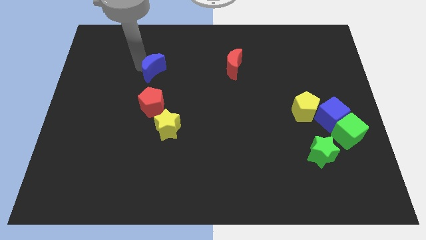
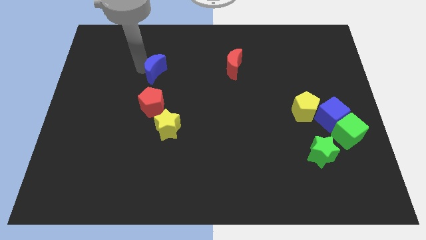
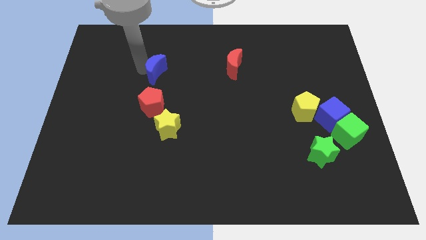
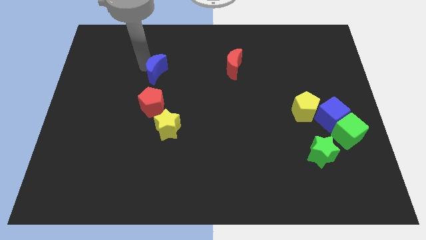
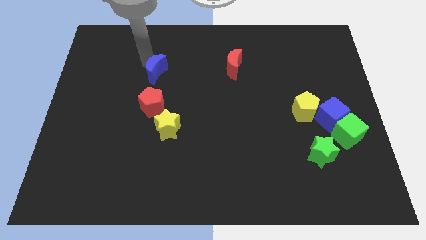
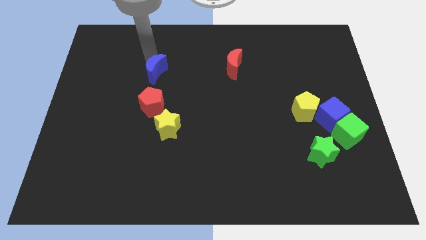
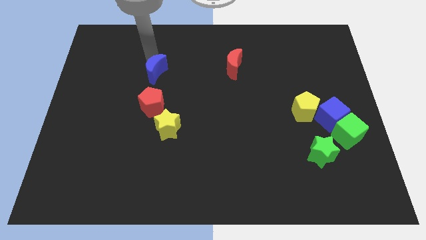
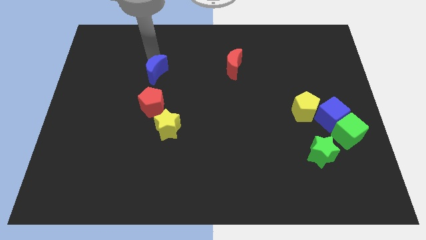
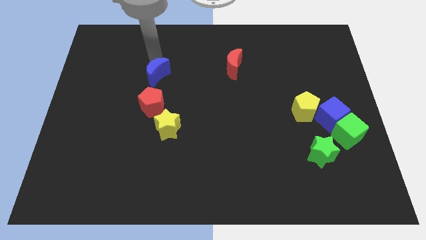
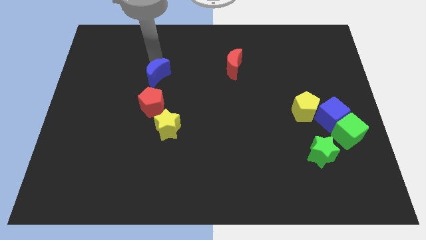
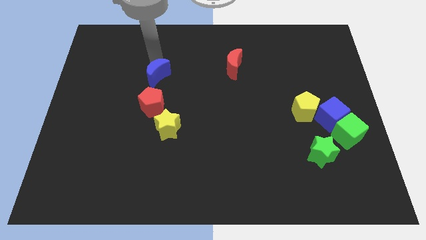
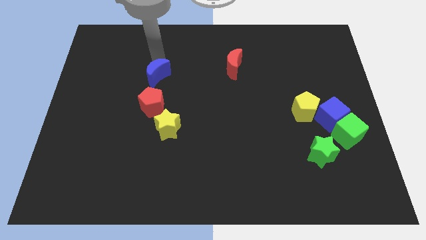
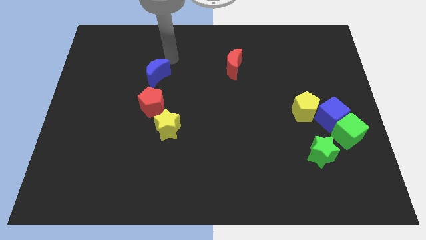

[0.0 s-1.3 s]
move the blue crescent close to the red pentagon

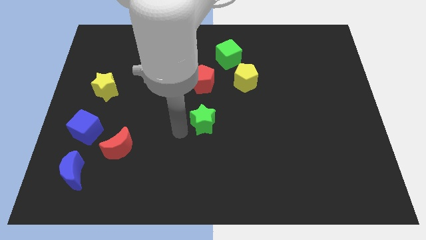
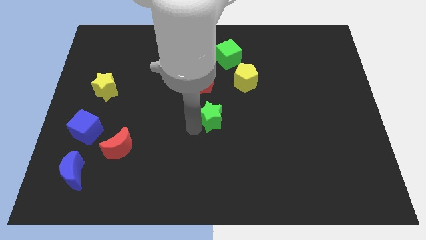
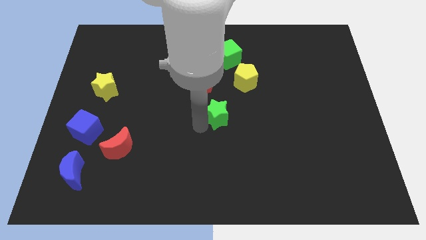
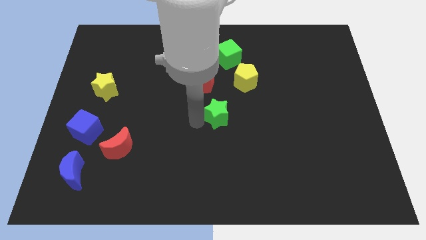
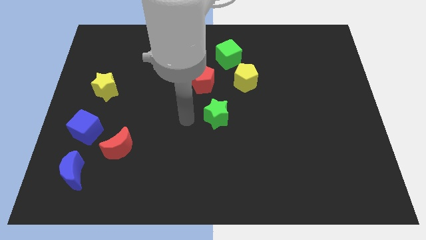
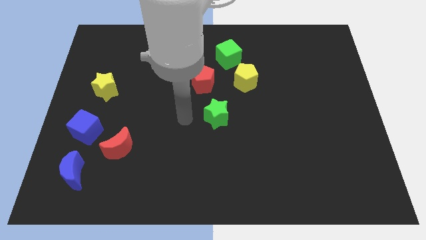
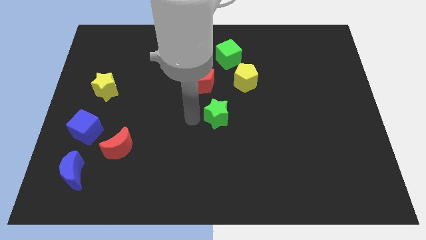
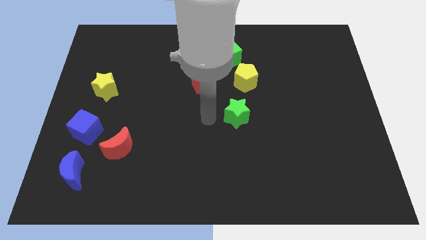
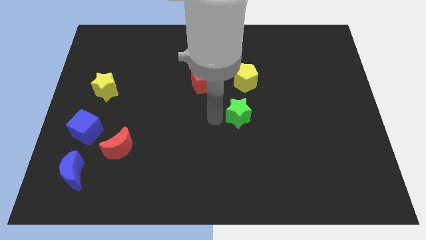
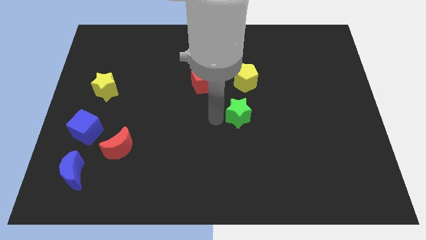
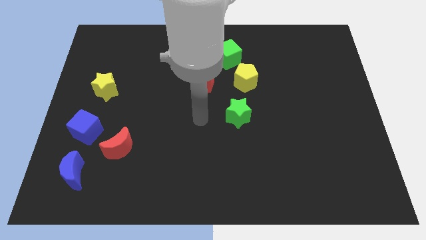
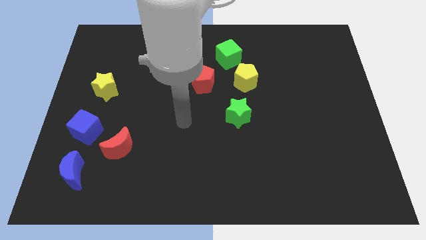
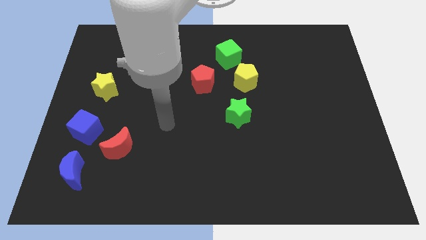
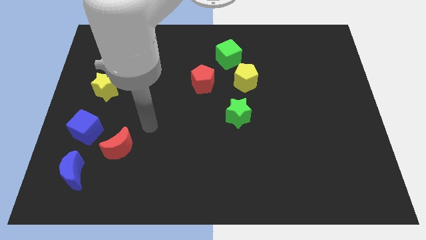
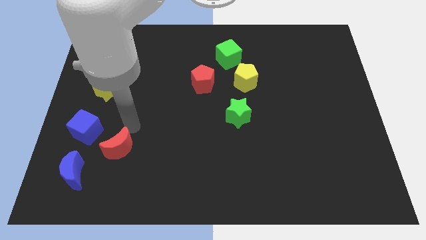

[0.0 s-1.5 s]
push the green star towards the bottom of the yellow pentagon

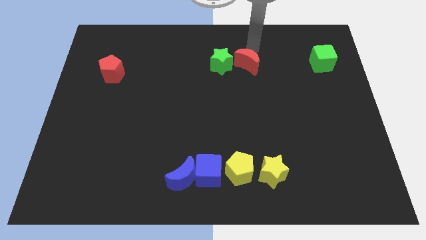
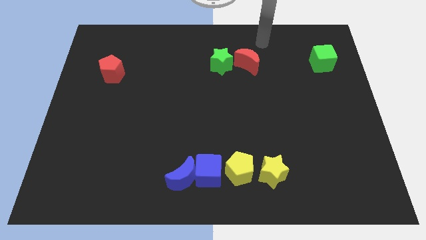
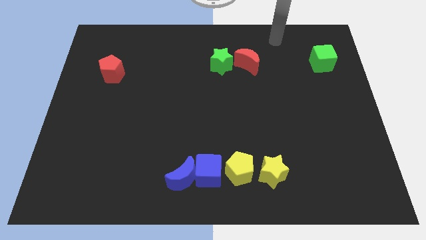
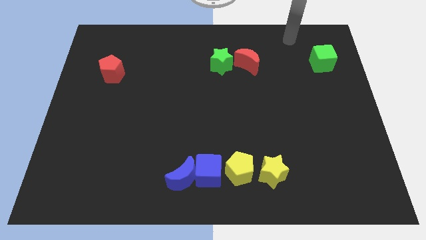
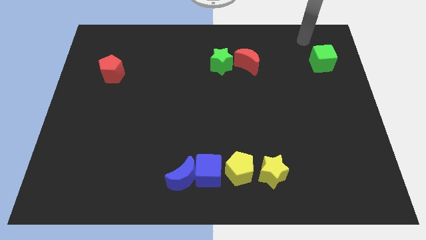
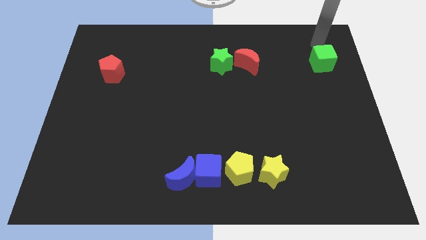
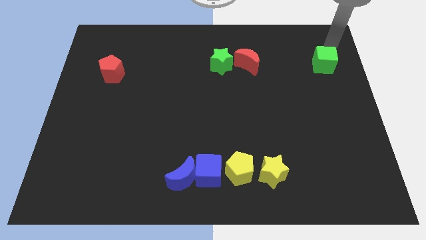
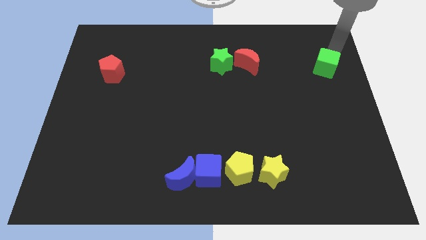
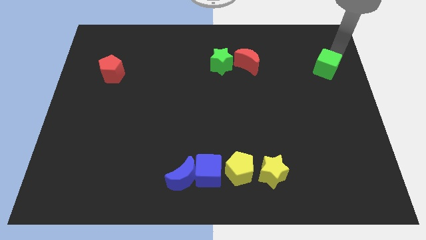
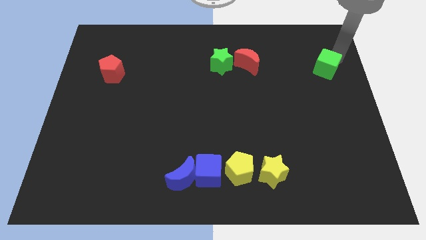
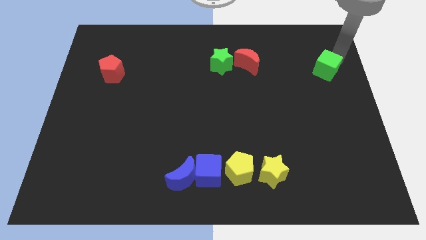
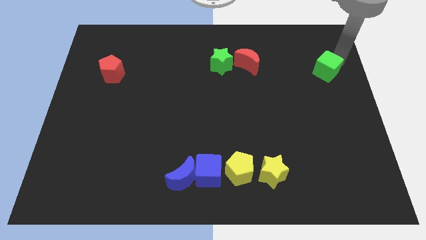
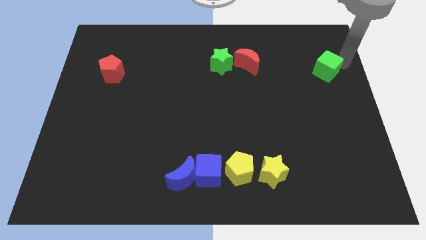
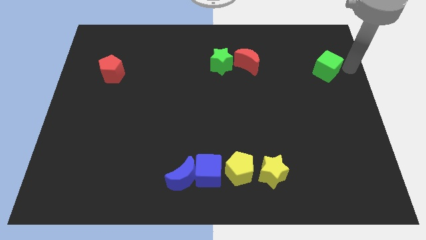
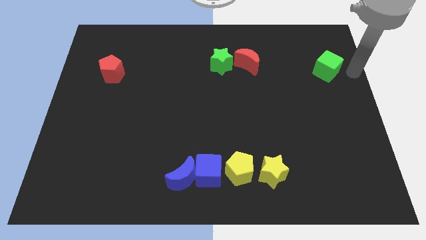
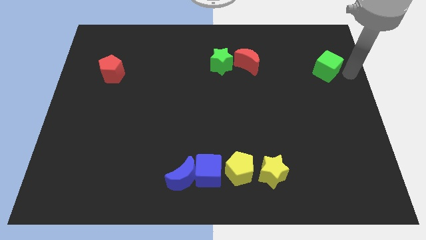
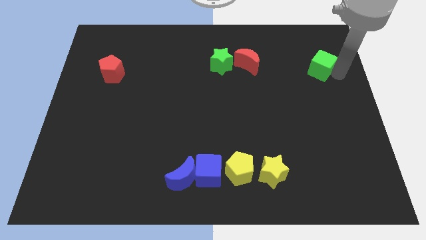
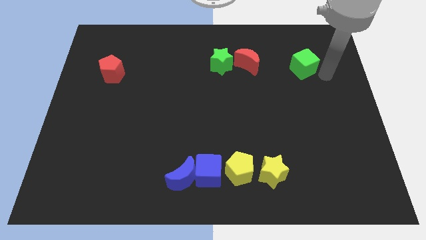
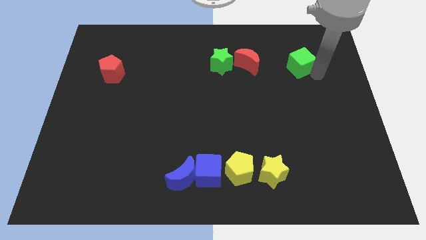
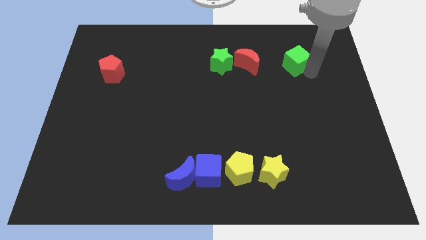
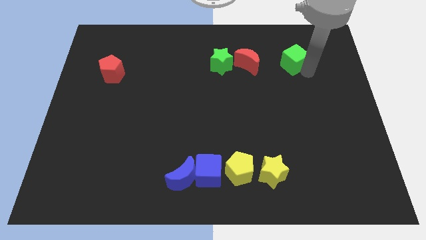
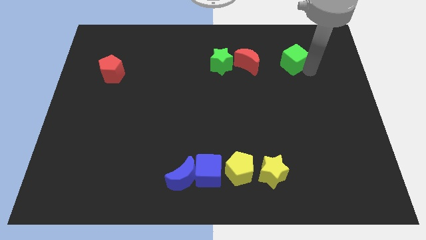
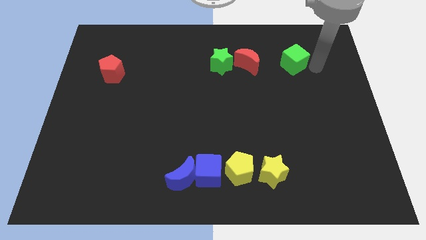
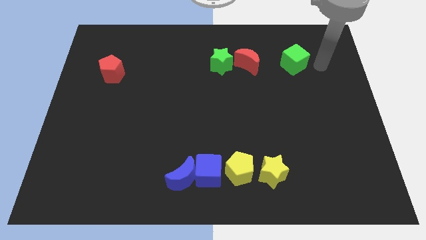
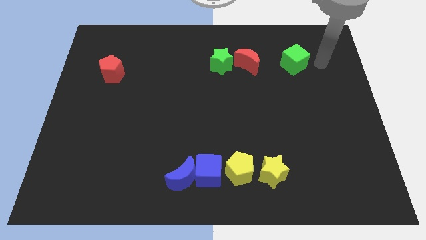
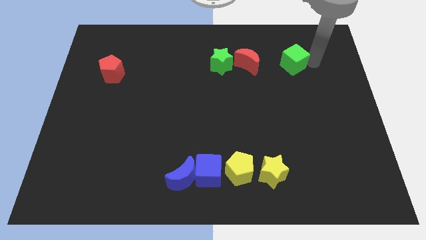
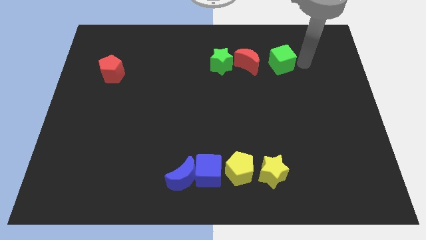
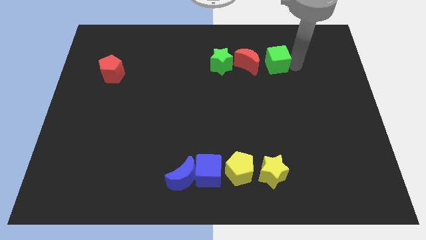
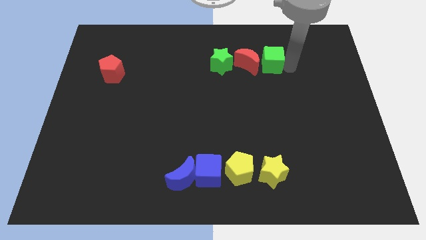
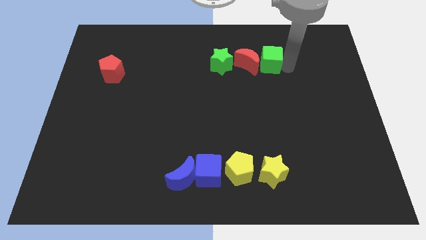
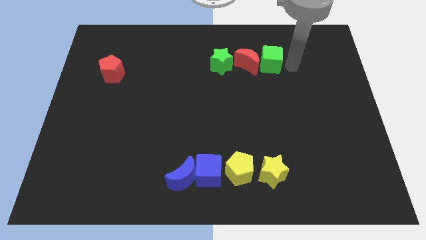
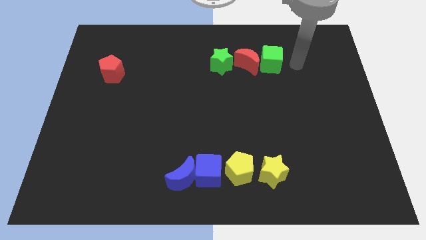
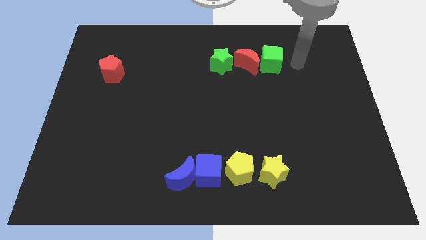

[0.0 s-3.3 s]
move the green cube right to the red crescent

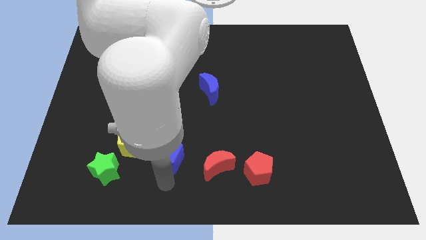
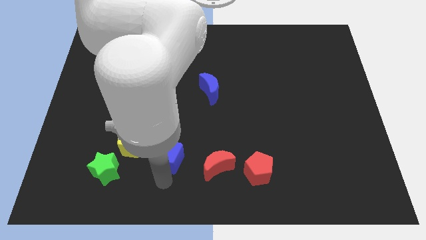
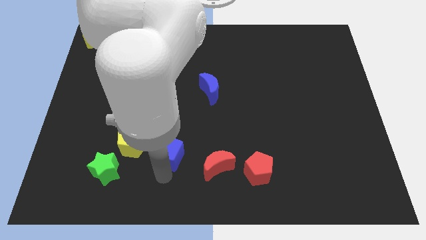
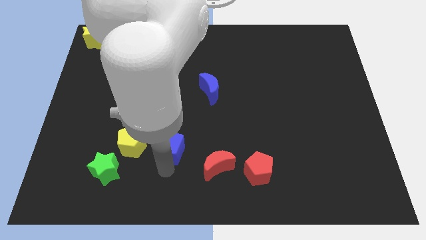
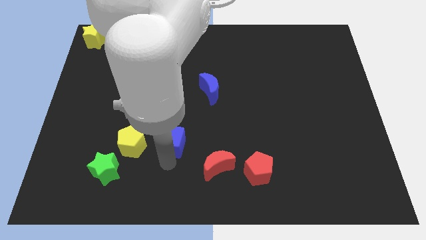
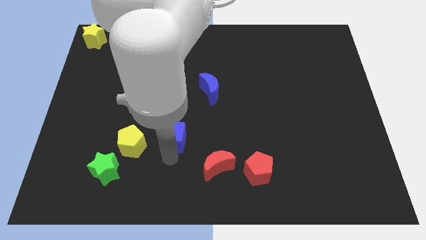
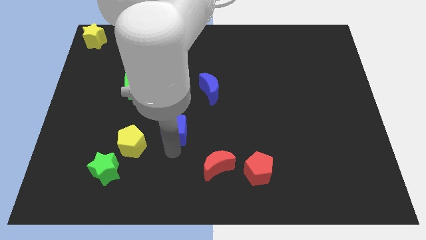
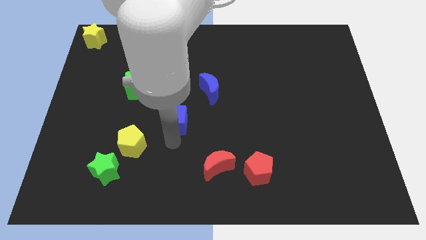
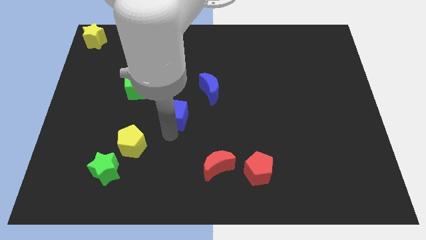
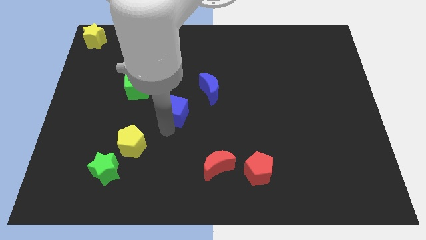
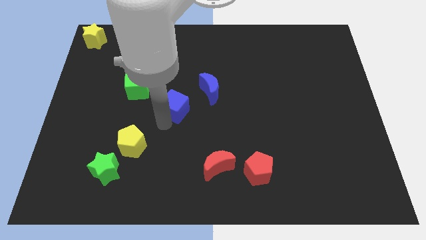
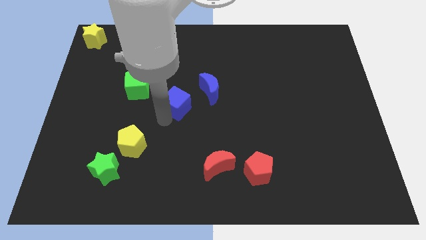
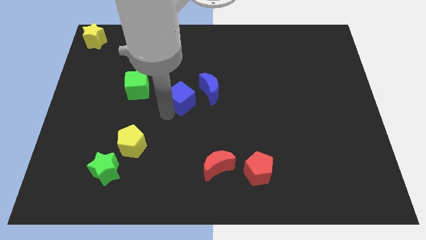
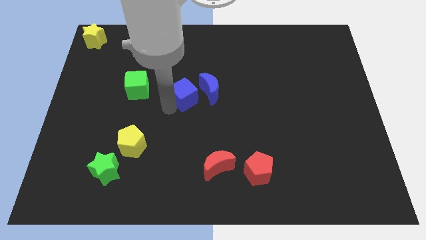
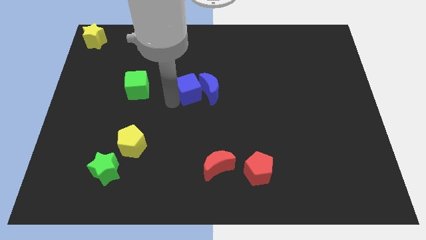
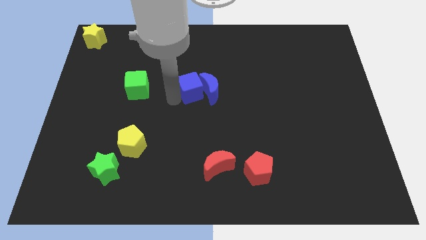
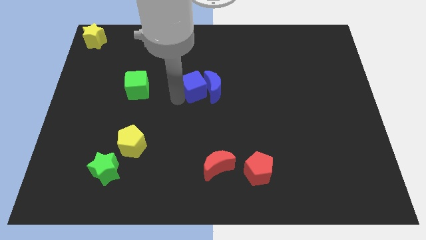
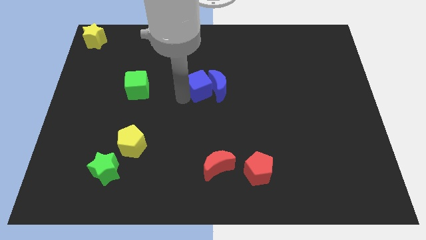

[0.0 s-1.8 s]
place the blue cube to the left side of the blue moon

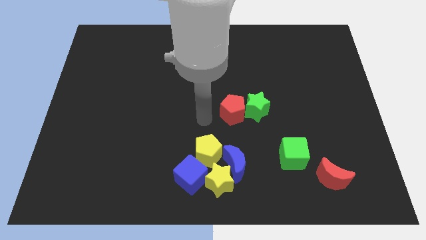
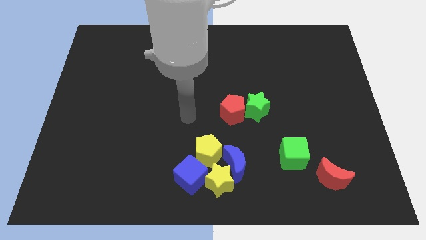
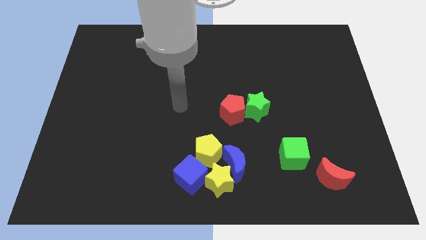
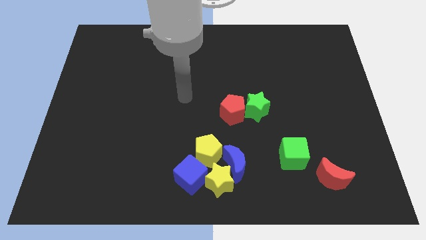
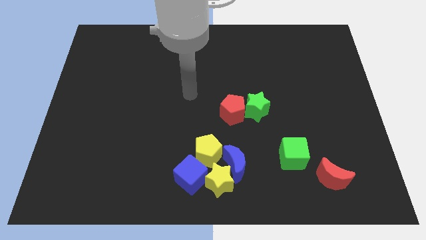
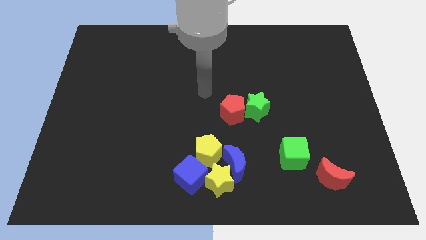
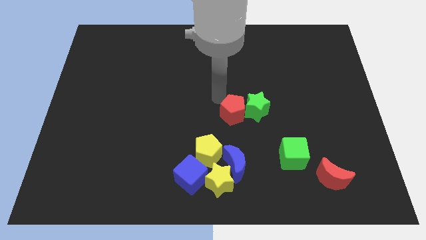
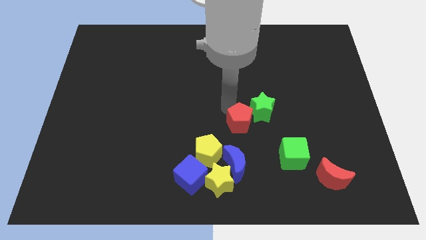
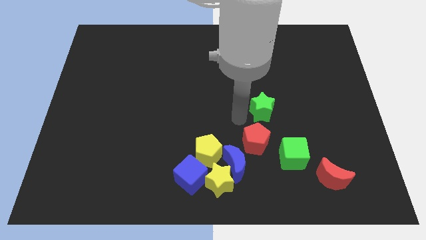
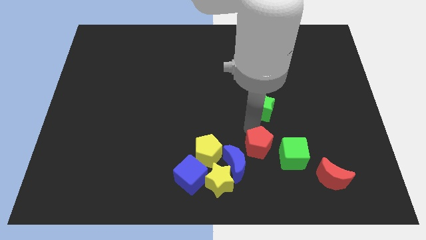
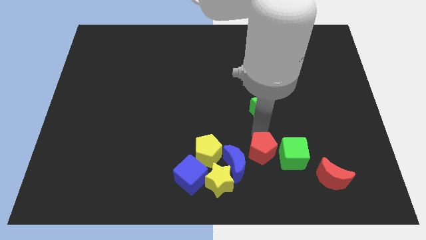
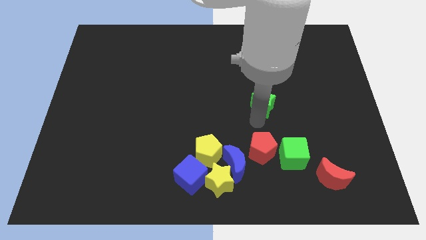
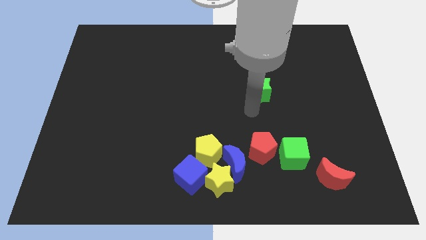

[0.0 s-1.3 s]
move red pentagon to the left of the green cube
